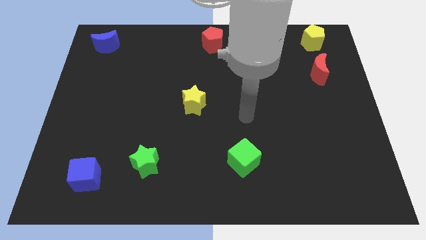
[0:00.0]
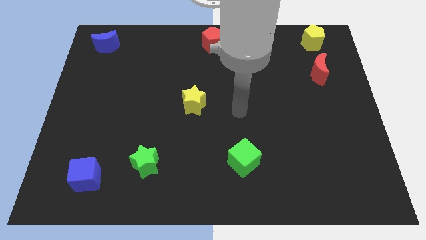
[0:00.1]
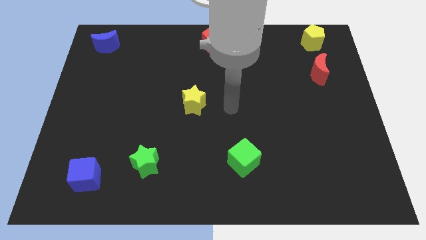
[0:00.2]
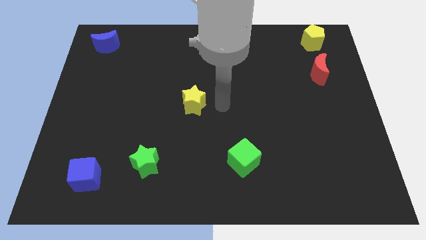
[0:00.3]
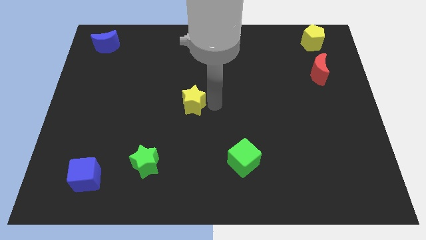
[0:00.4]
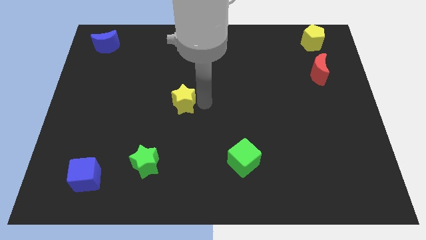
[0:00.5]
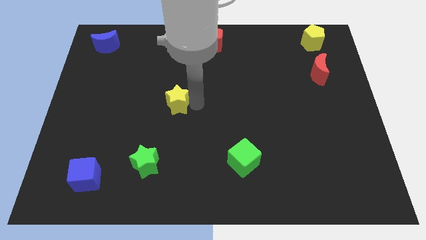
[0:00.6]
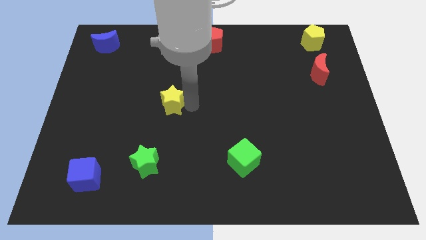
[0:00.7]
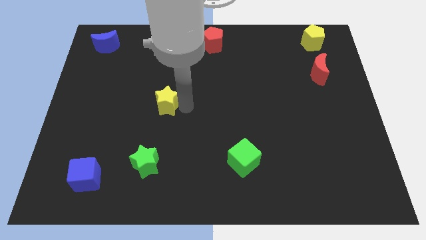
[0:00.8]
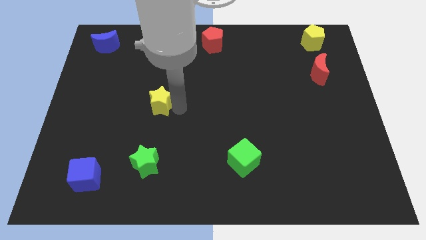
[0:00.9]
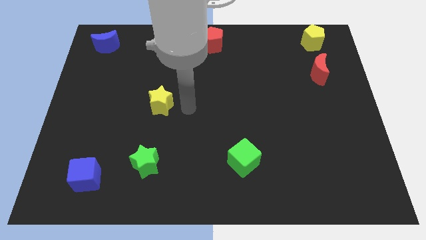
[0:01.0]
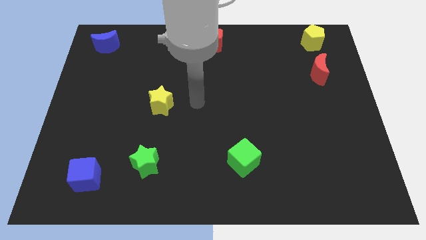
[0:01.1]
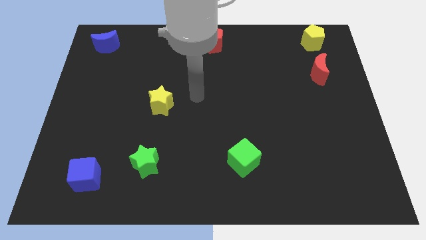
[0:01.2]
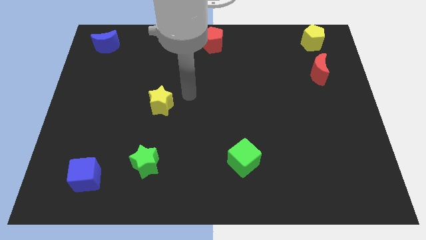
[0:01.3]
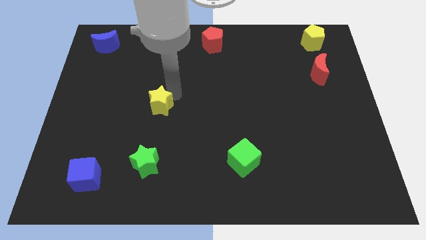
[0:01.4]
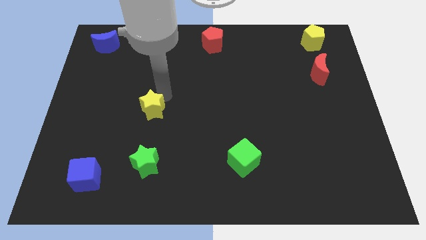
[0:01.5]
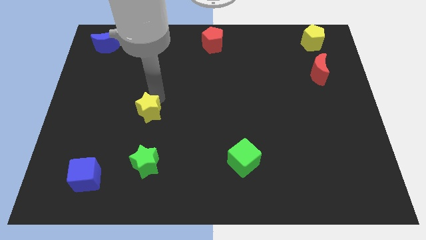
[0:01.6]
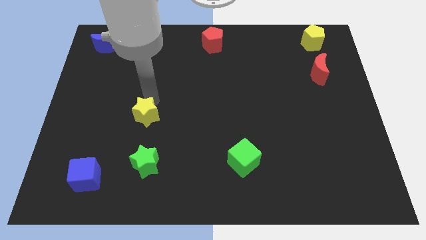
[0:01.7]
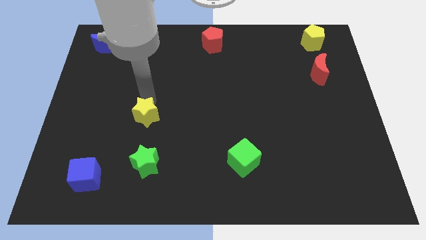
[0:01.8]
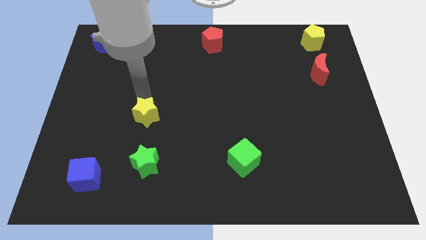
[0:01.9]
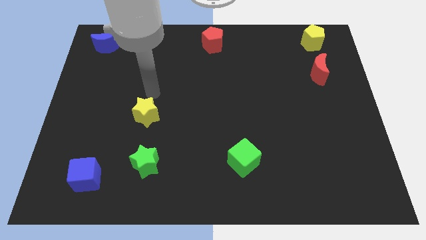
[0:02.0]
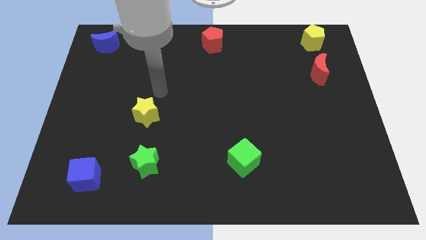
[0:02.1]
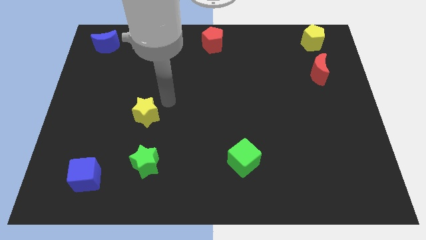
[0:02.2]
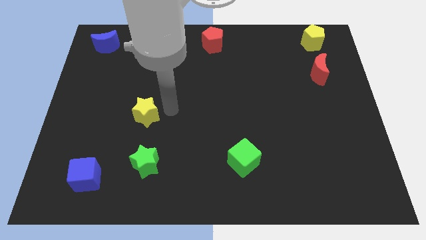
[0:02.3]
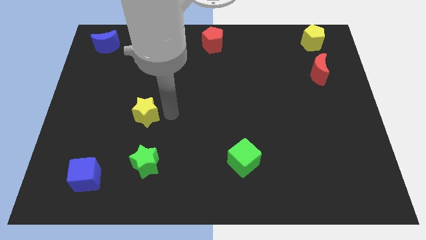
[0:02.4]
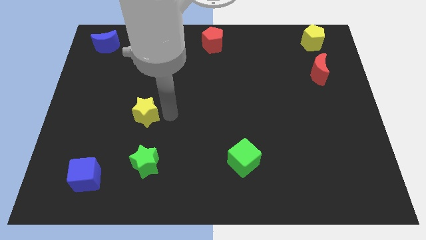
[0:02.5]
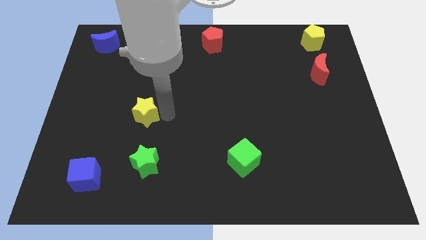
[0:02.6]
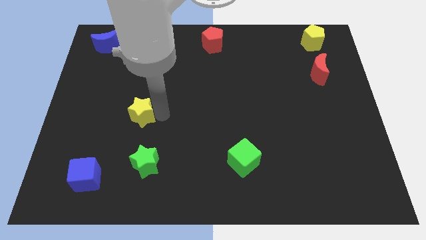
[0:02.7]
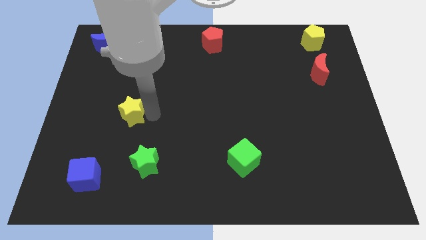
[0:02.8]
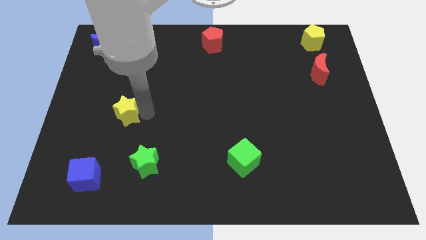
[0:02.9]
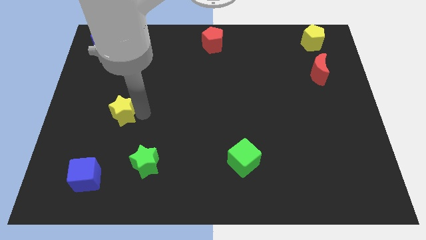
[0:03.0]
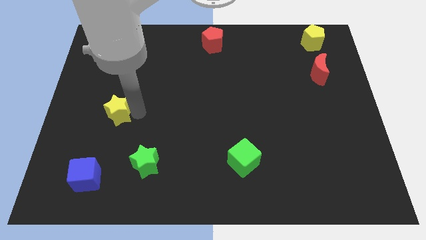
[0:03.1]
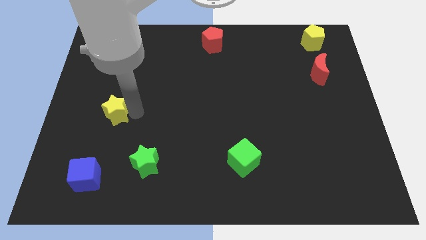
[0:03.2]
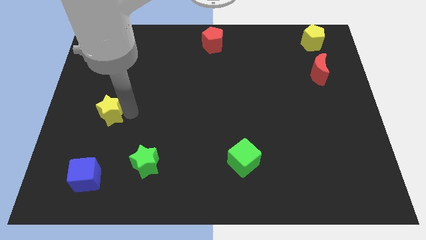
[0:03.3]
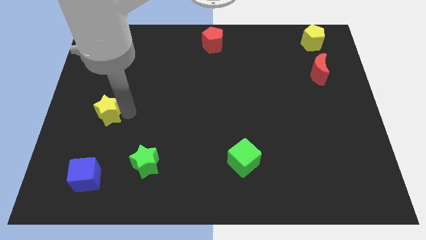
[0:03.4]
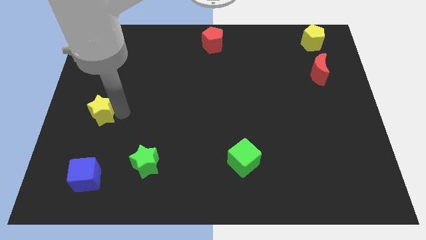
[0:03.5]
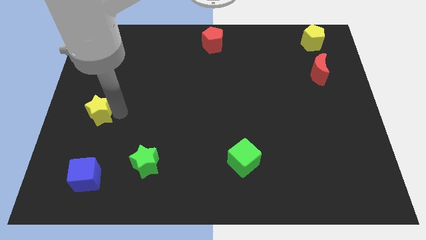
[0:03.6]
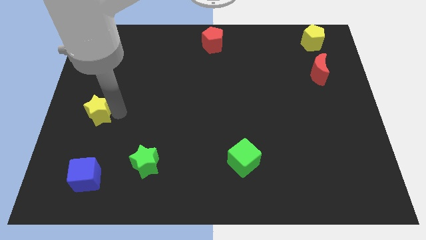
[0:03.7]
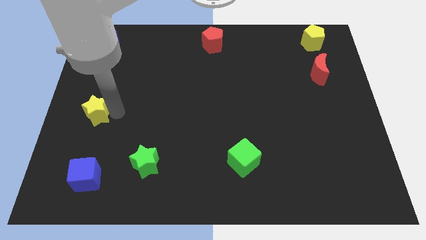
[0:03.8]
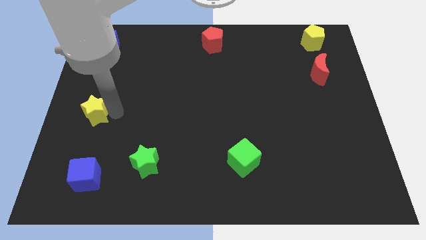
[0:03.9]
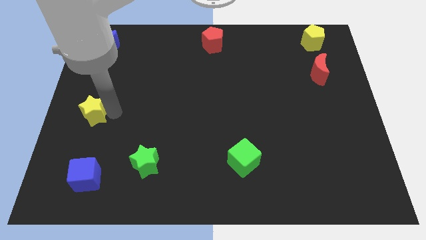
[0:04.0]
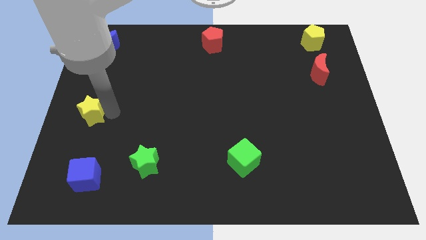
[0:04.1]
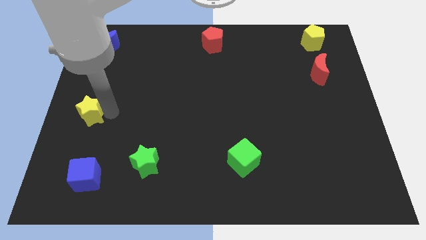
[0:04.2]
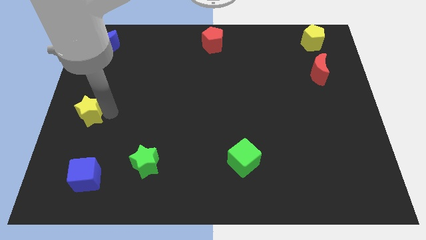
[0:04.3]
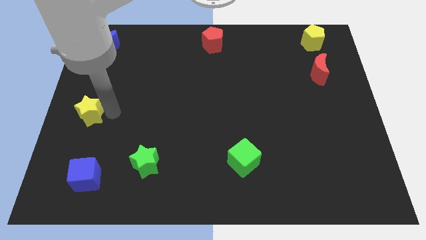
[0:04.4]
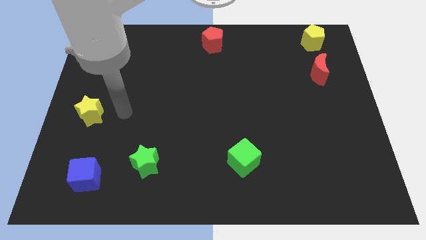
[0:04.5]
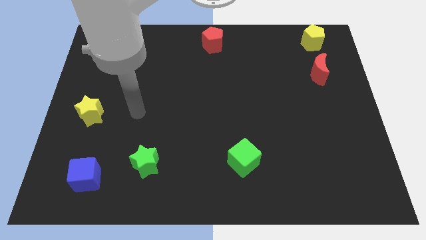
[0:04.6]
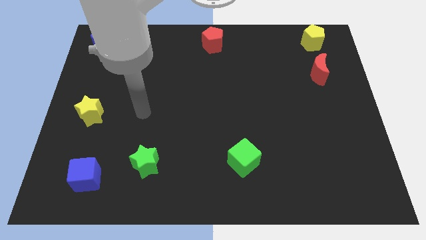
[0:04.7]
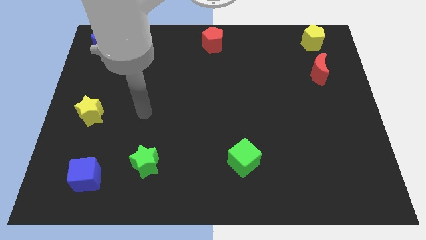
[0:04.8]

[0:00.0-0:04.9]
put the yellow star vertically above the top side of the blue cube

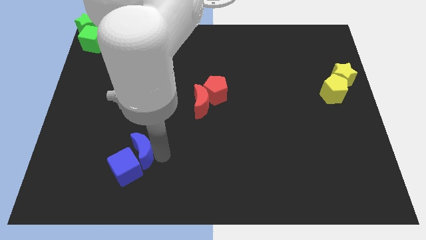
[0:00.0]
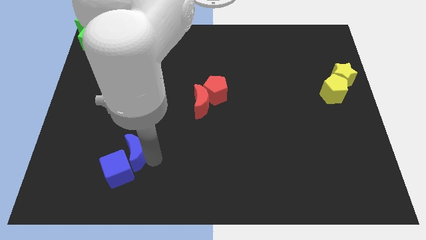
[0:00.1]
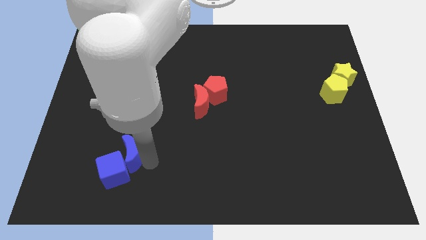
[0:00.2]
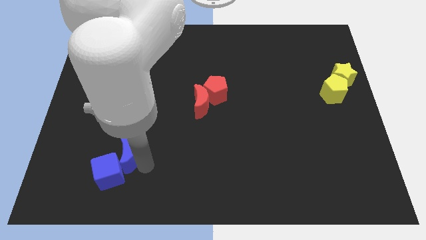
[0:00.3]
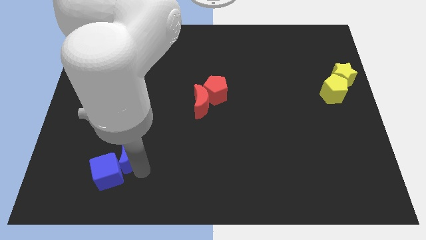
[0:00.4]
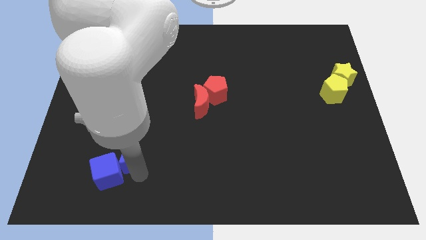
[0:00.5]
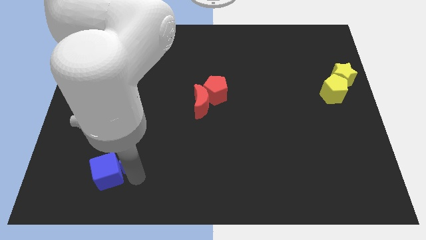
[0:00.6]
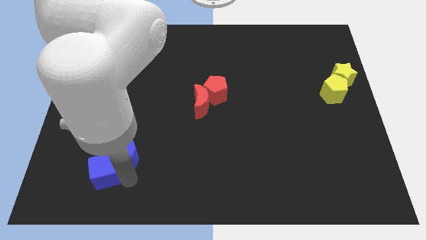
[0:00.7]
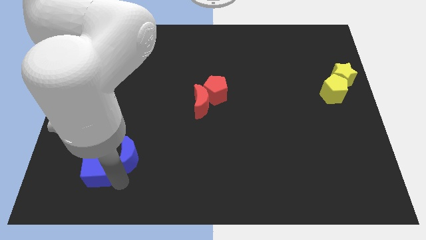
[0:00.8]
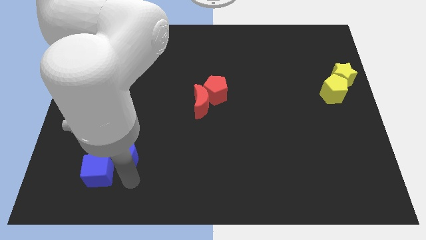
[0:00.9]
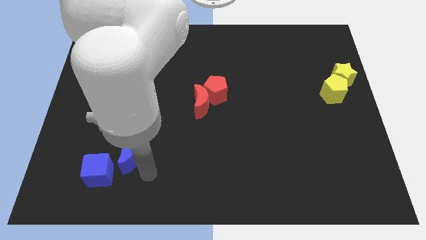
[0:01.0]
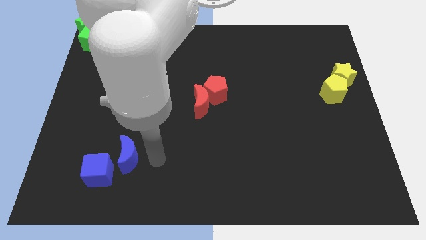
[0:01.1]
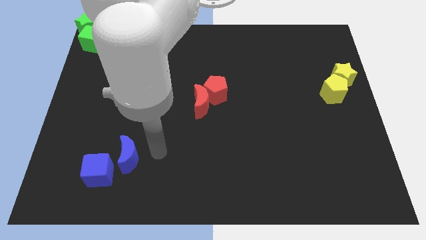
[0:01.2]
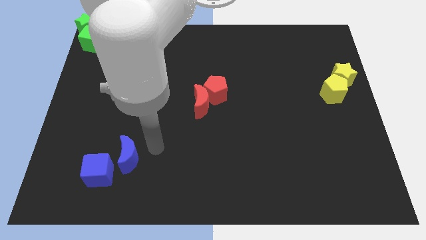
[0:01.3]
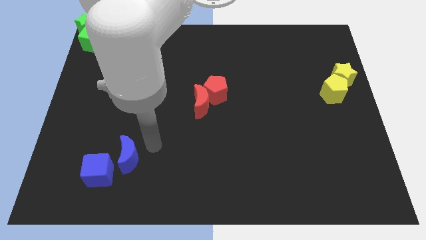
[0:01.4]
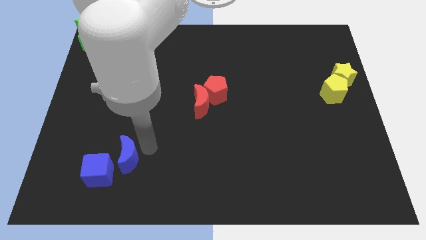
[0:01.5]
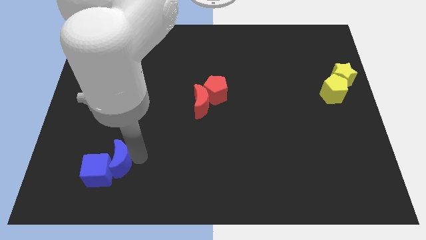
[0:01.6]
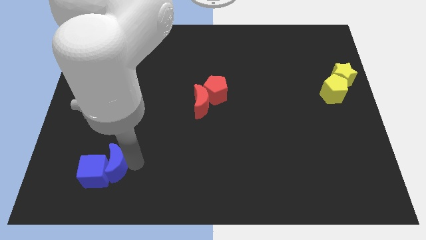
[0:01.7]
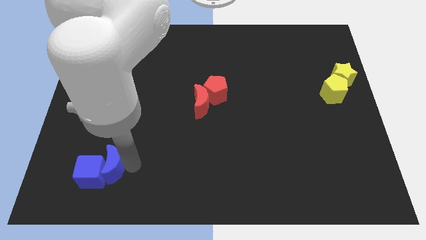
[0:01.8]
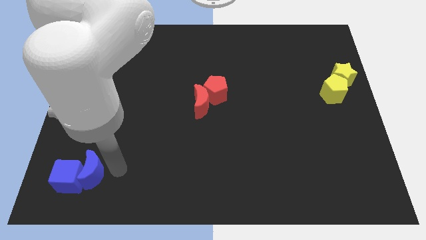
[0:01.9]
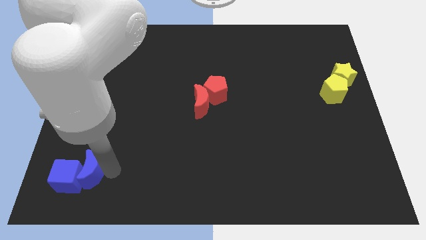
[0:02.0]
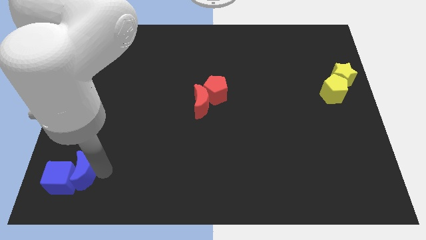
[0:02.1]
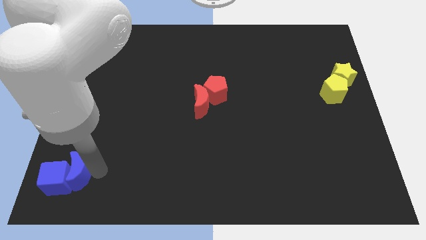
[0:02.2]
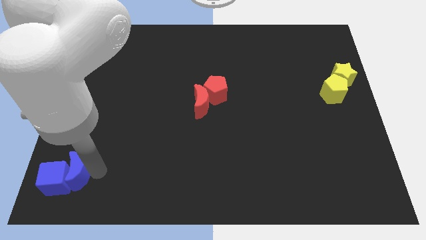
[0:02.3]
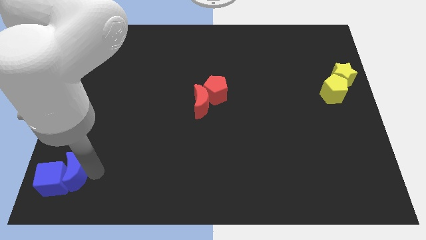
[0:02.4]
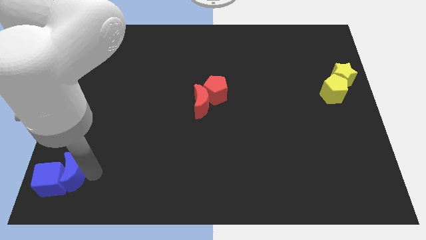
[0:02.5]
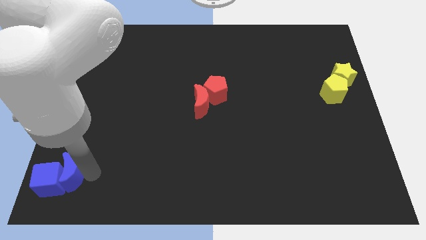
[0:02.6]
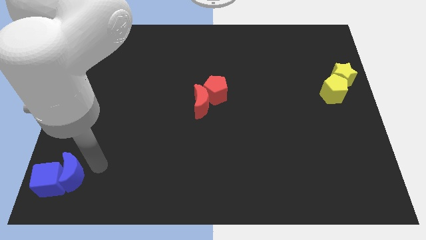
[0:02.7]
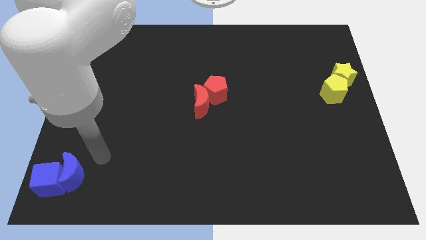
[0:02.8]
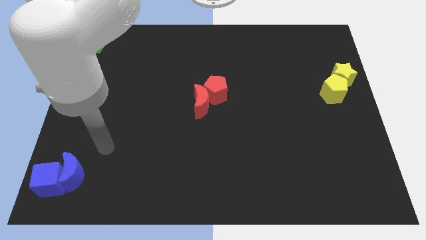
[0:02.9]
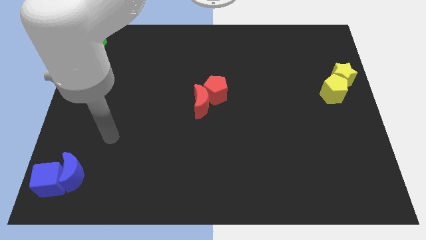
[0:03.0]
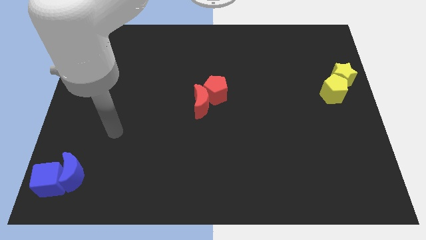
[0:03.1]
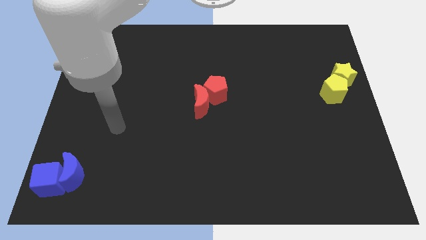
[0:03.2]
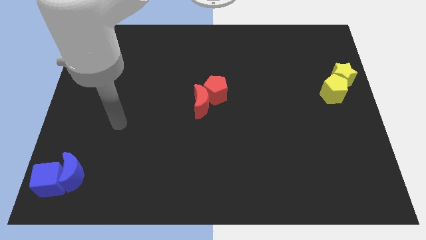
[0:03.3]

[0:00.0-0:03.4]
move the blue crescent into blue cube

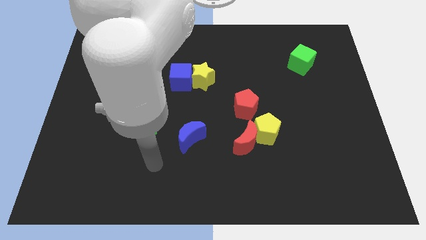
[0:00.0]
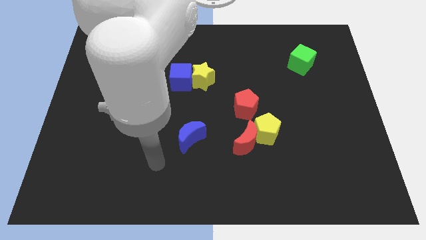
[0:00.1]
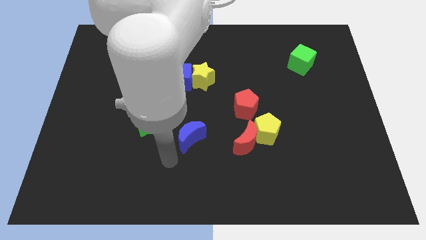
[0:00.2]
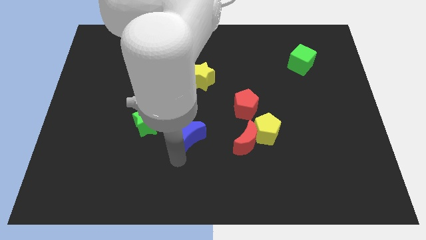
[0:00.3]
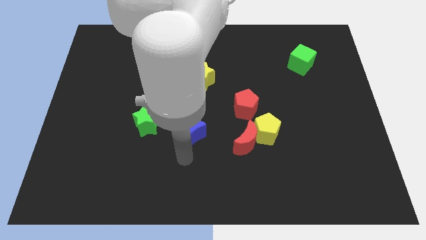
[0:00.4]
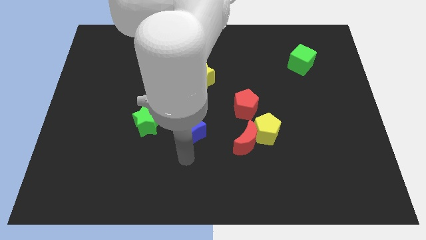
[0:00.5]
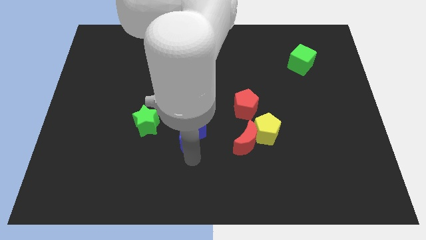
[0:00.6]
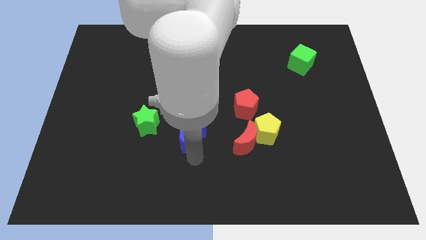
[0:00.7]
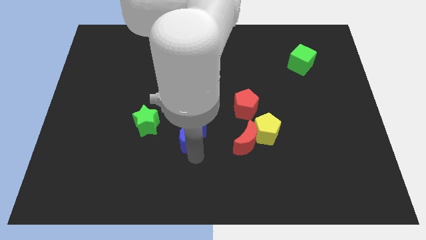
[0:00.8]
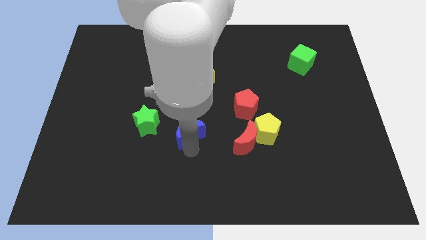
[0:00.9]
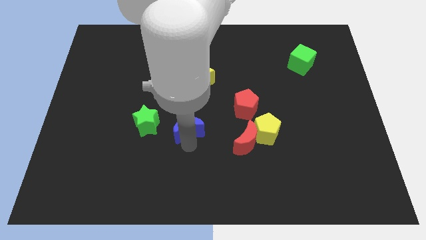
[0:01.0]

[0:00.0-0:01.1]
move your arm to the bottom side of the blue moon
